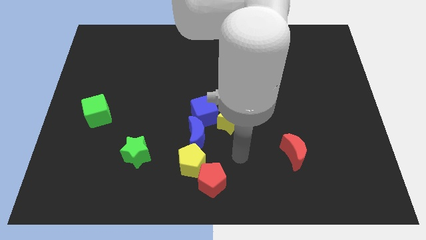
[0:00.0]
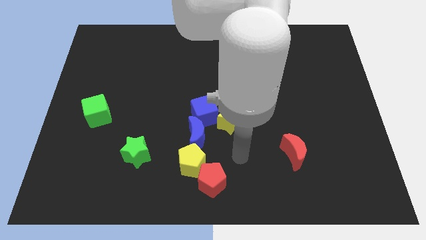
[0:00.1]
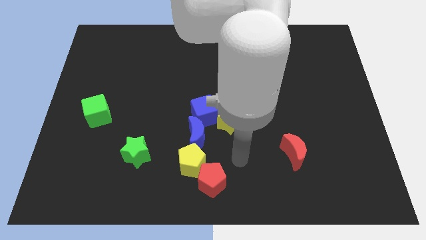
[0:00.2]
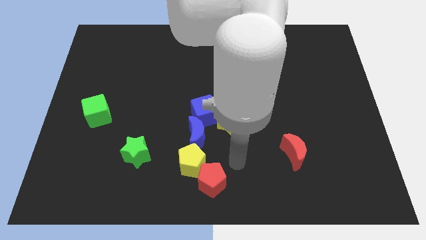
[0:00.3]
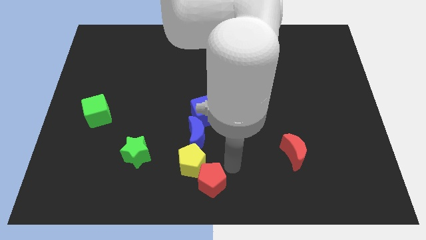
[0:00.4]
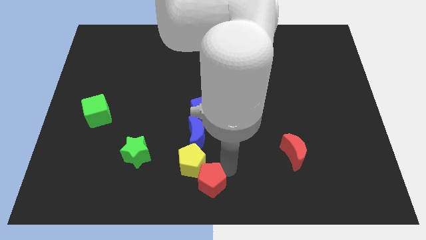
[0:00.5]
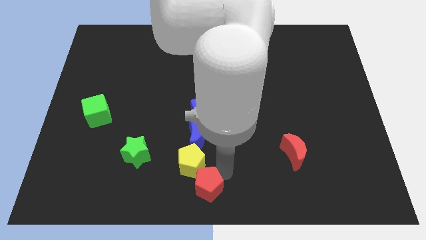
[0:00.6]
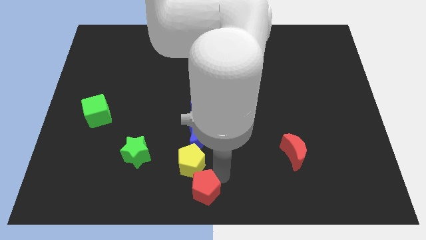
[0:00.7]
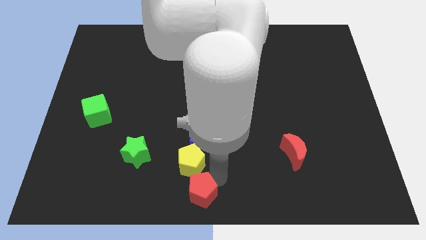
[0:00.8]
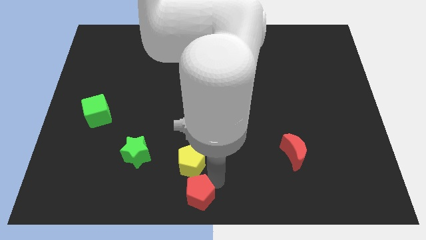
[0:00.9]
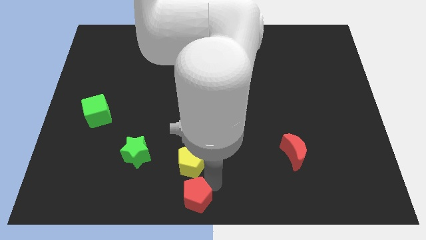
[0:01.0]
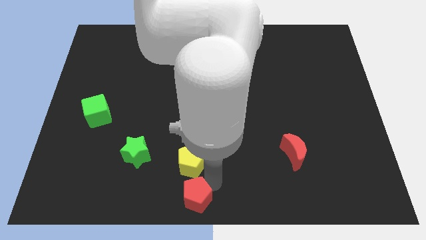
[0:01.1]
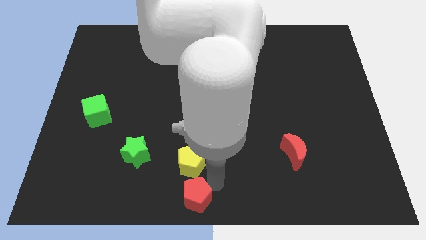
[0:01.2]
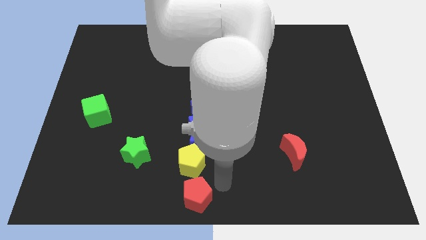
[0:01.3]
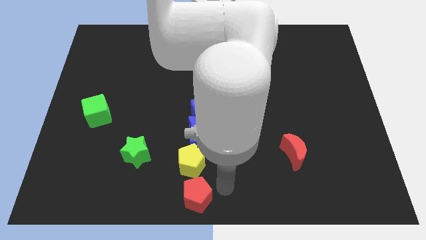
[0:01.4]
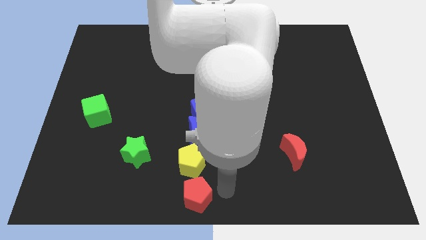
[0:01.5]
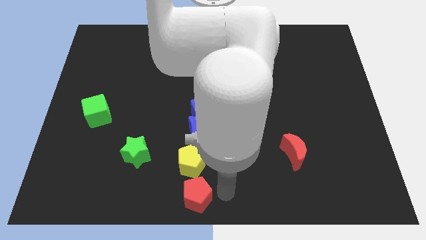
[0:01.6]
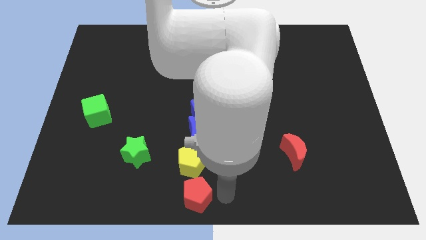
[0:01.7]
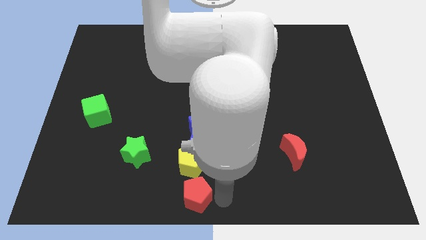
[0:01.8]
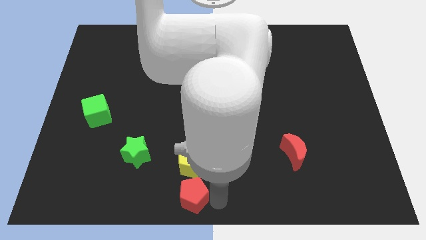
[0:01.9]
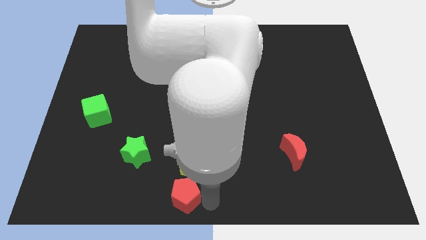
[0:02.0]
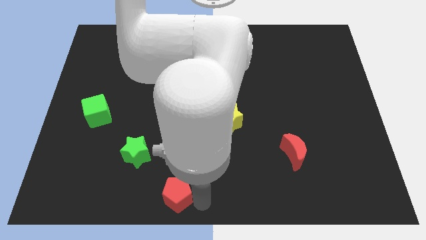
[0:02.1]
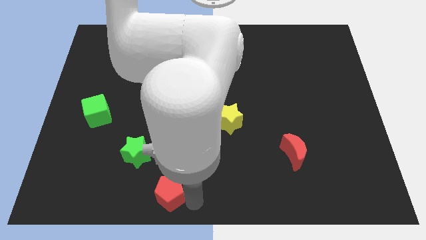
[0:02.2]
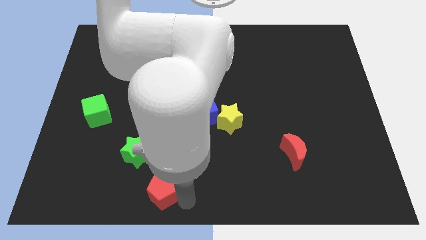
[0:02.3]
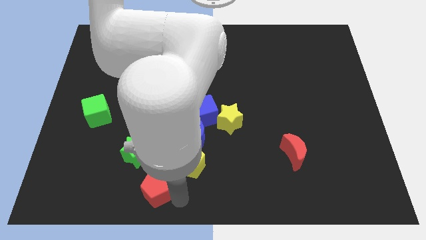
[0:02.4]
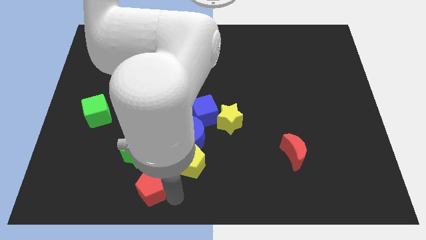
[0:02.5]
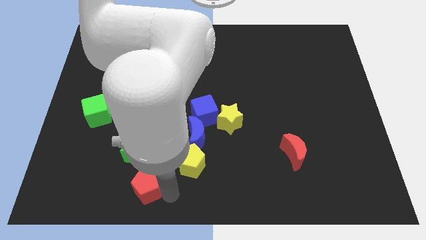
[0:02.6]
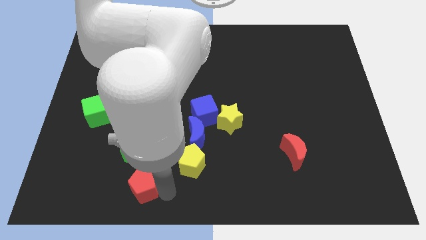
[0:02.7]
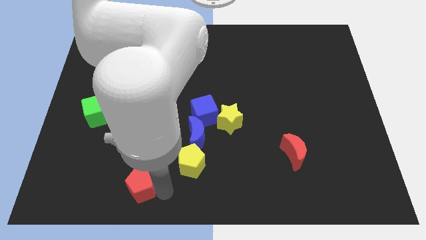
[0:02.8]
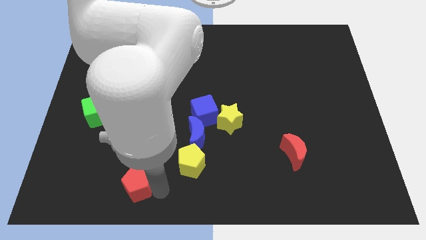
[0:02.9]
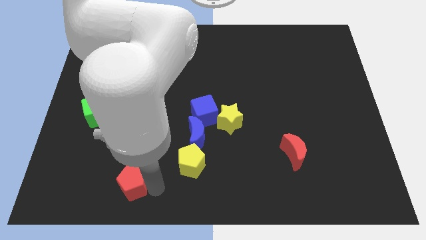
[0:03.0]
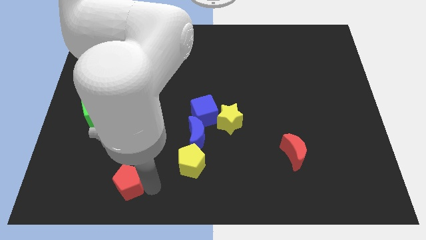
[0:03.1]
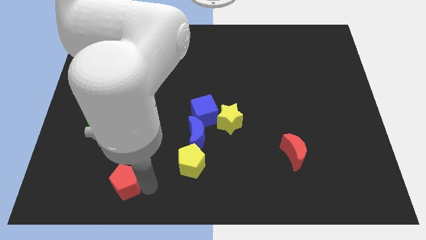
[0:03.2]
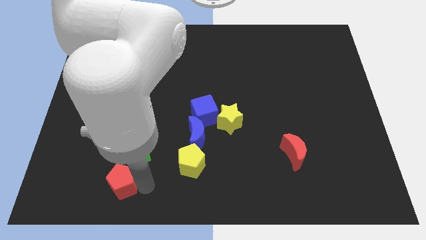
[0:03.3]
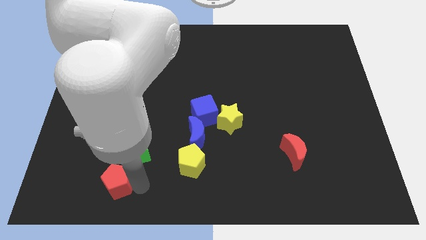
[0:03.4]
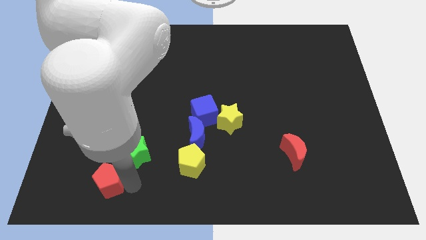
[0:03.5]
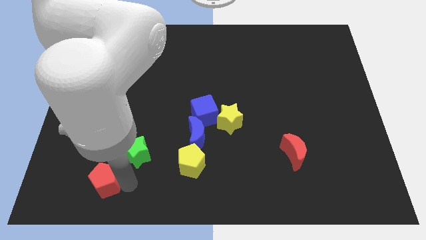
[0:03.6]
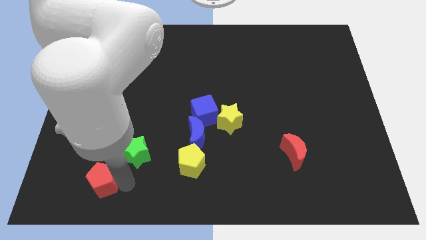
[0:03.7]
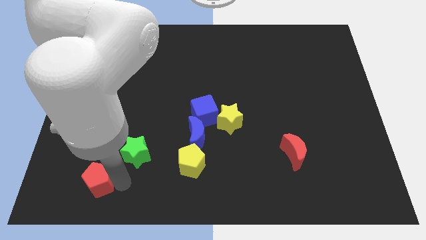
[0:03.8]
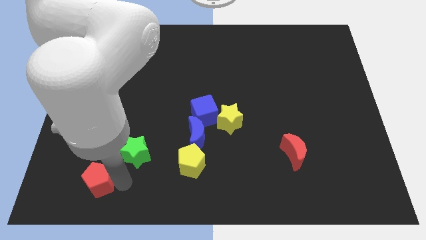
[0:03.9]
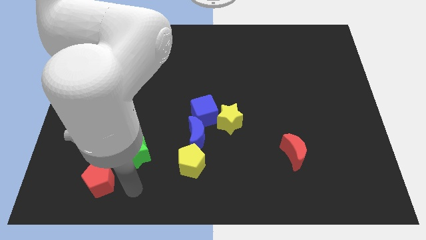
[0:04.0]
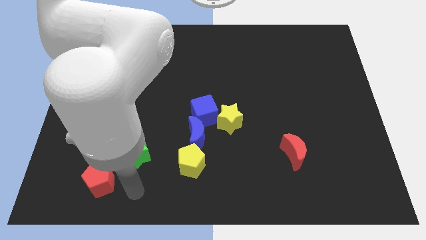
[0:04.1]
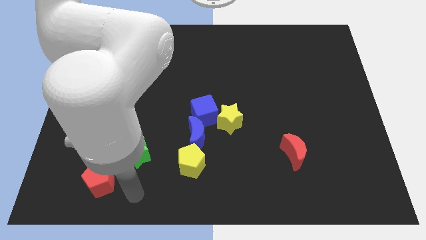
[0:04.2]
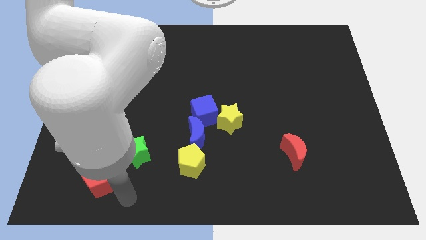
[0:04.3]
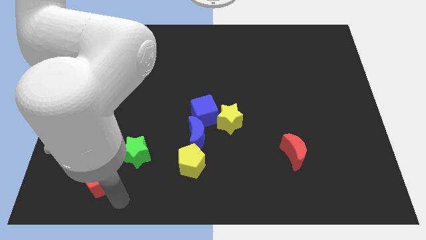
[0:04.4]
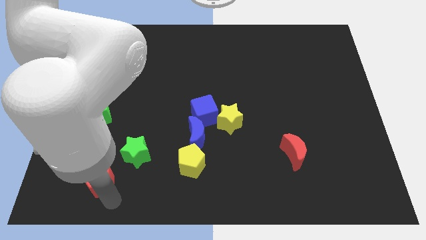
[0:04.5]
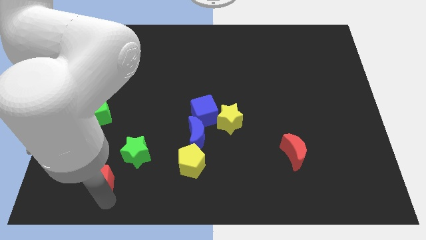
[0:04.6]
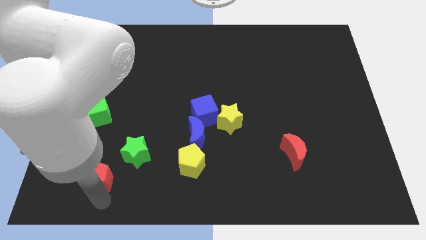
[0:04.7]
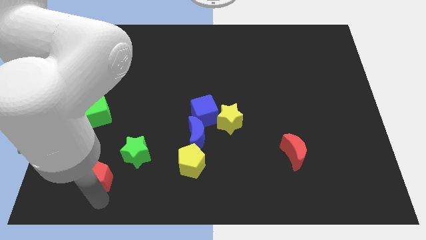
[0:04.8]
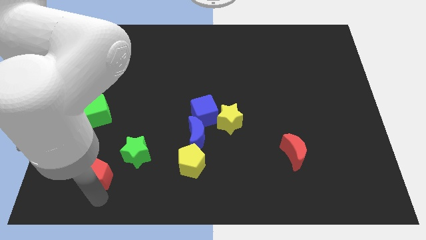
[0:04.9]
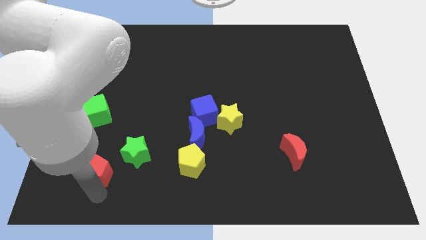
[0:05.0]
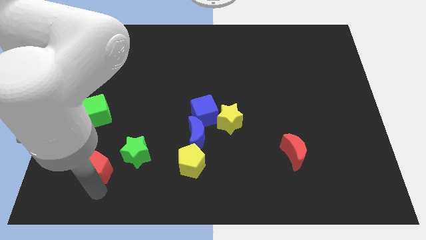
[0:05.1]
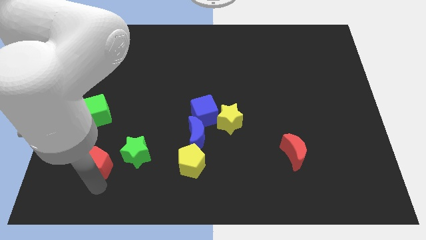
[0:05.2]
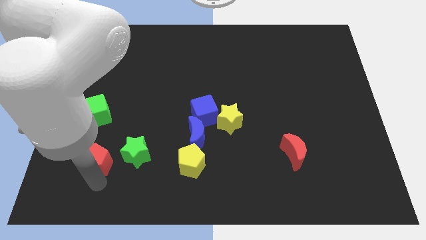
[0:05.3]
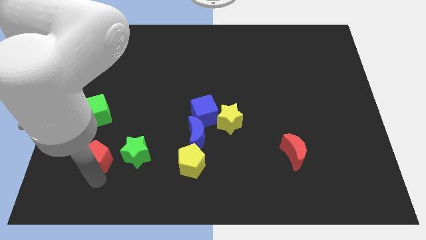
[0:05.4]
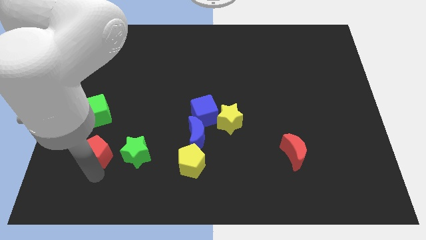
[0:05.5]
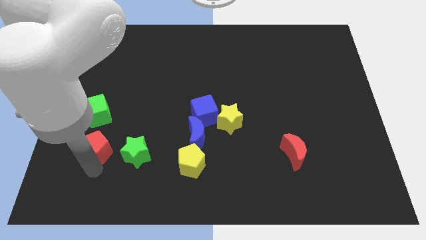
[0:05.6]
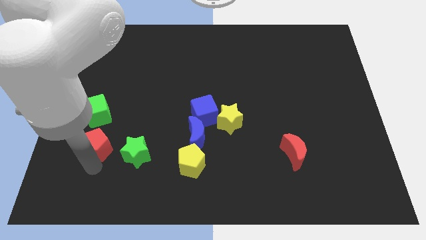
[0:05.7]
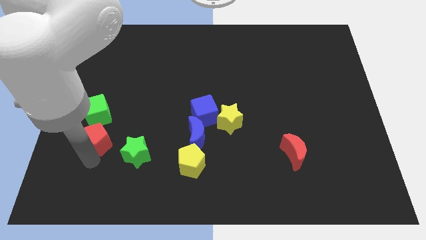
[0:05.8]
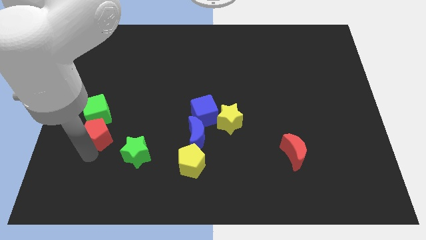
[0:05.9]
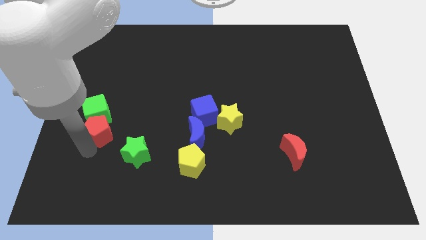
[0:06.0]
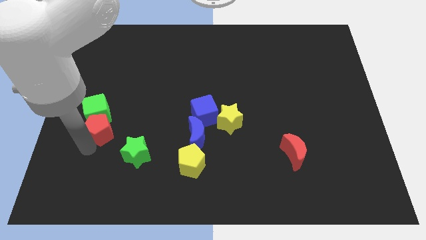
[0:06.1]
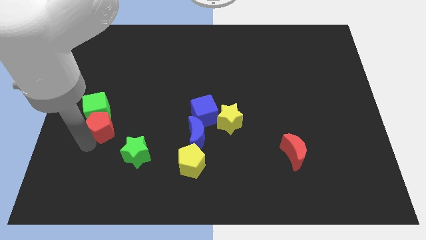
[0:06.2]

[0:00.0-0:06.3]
move the red pentagon to the green cube

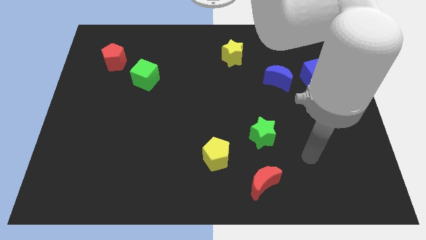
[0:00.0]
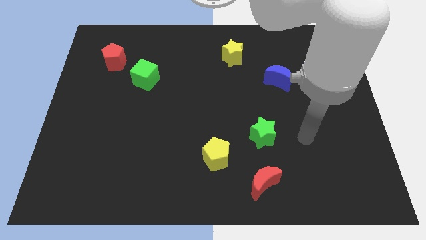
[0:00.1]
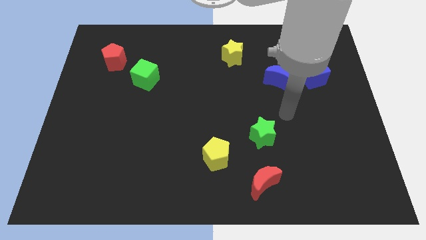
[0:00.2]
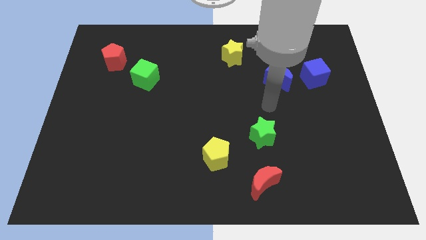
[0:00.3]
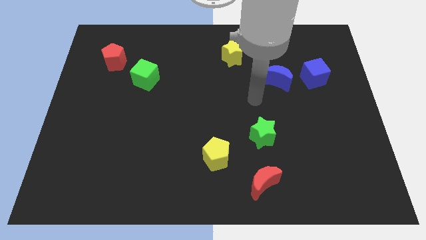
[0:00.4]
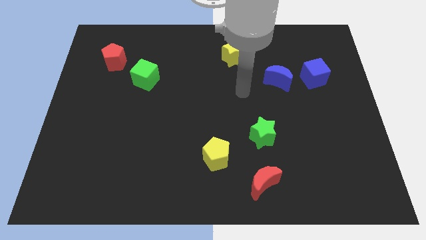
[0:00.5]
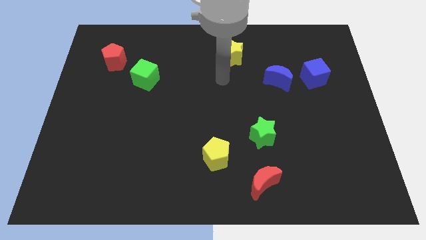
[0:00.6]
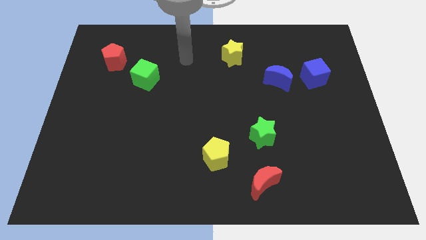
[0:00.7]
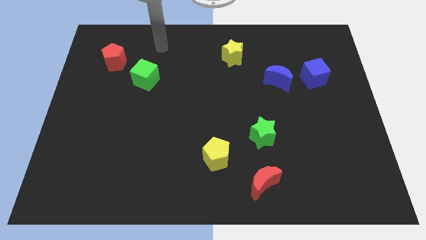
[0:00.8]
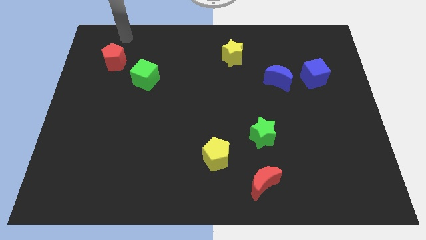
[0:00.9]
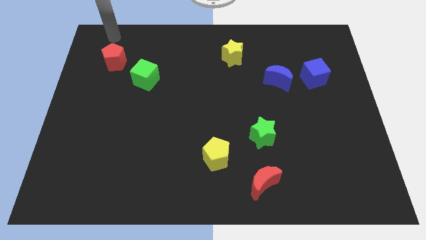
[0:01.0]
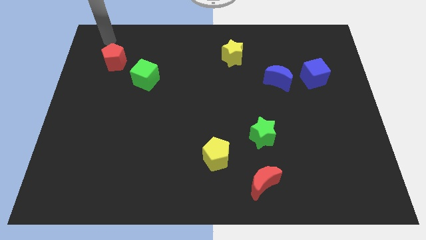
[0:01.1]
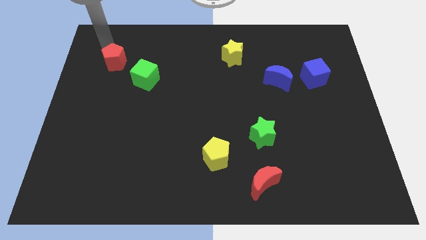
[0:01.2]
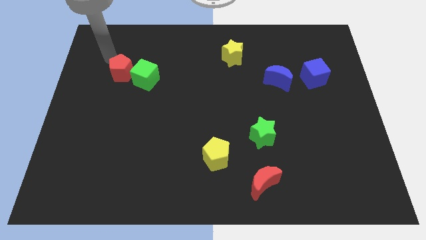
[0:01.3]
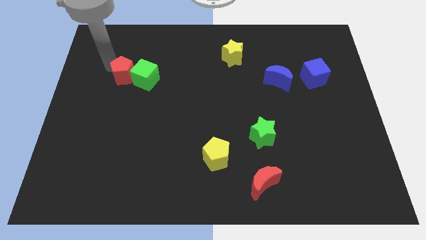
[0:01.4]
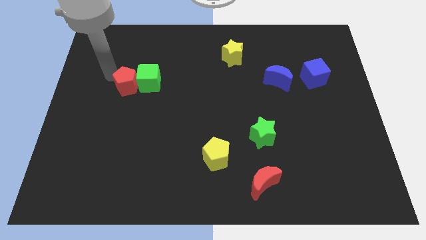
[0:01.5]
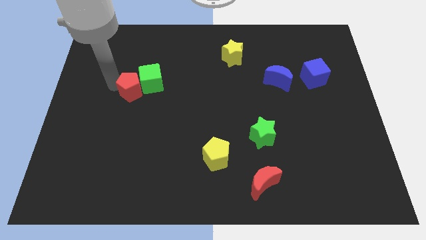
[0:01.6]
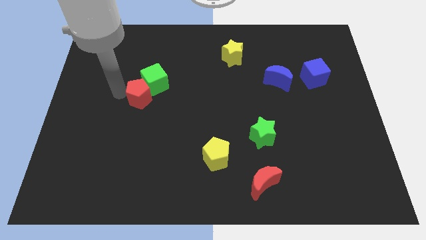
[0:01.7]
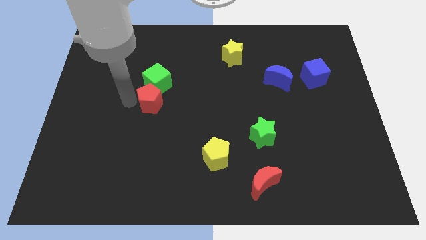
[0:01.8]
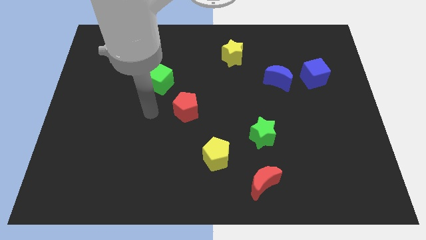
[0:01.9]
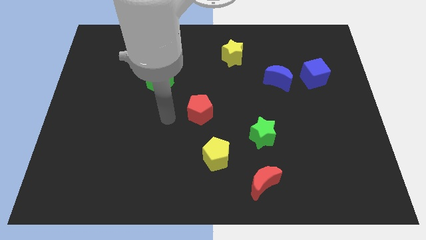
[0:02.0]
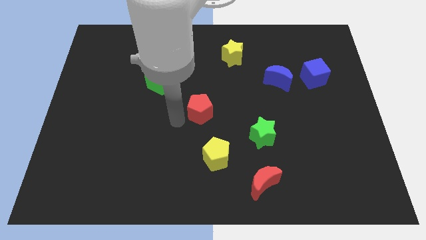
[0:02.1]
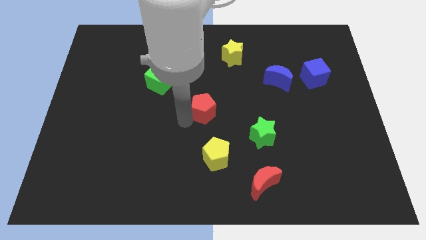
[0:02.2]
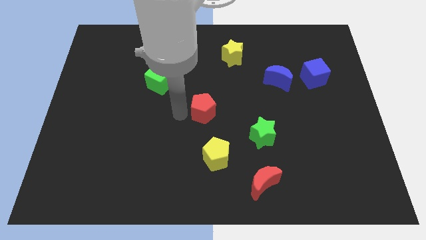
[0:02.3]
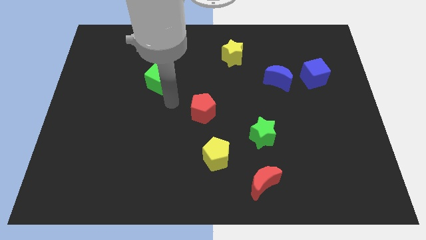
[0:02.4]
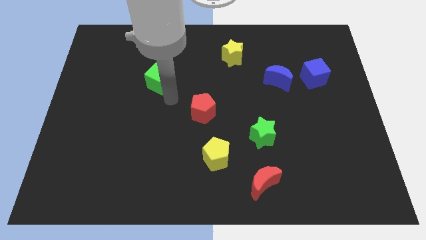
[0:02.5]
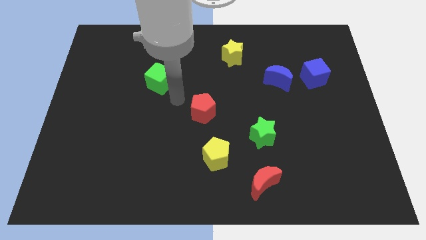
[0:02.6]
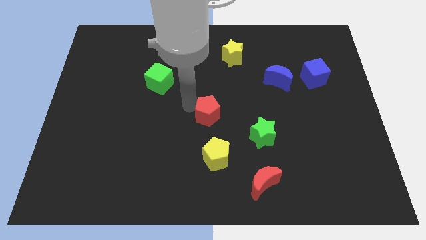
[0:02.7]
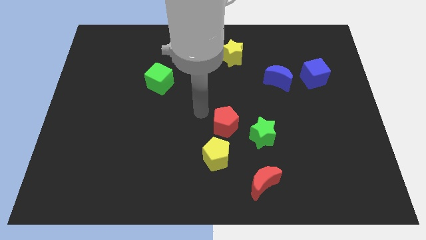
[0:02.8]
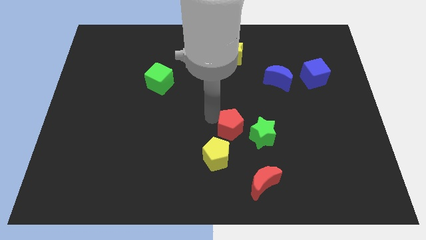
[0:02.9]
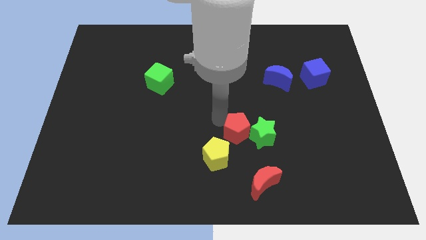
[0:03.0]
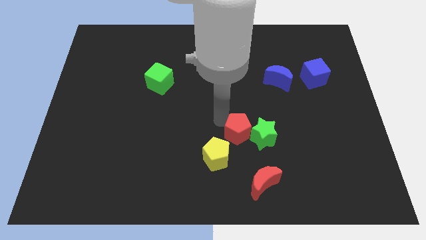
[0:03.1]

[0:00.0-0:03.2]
push the red pentagon close to the green star
